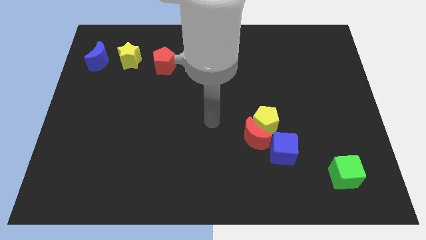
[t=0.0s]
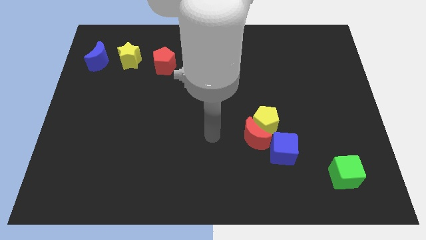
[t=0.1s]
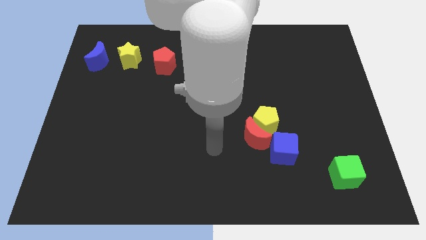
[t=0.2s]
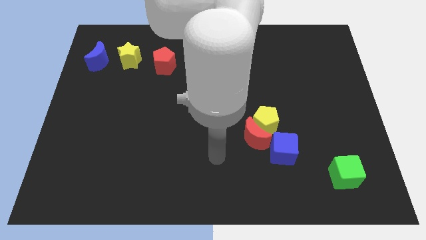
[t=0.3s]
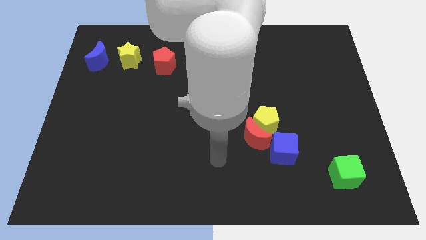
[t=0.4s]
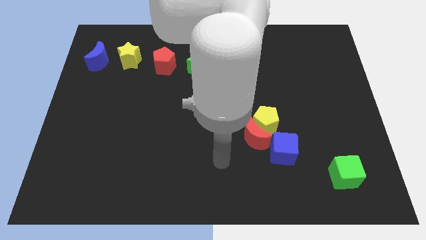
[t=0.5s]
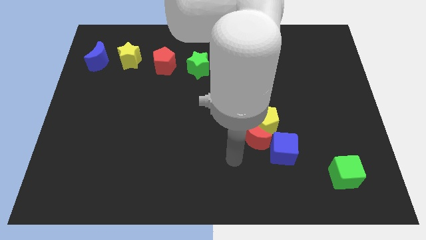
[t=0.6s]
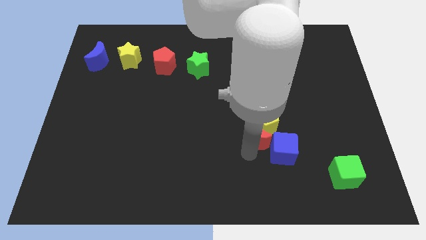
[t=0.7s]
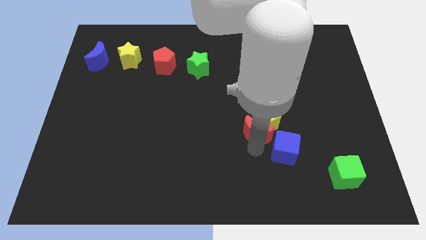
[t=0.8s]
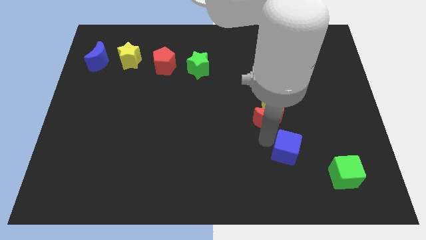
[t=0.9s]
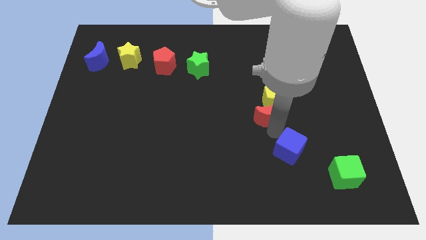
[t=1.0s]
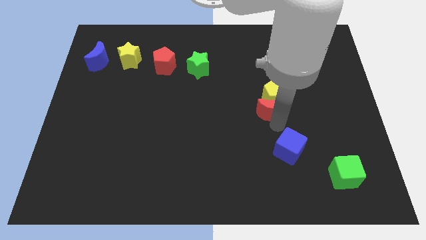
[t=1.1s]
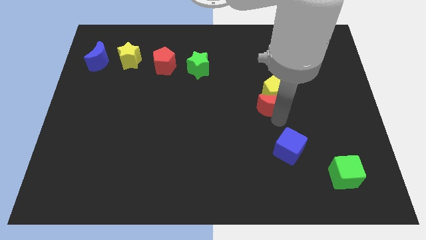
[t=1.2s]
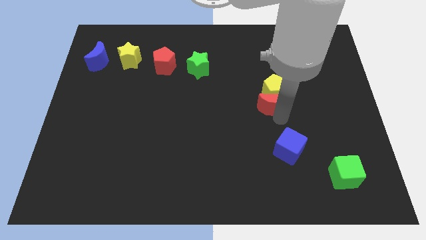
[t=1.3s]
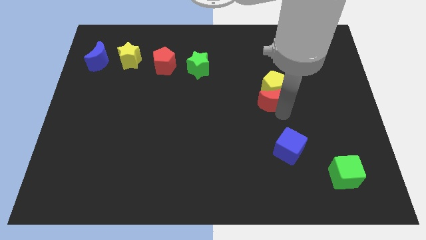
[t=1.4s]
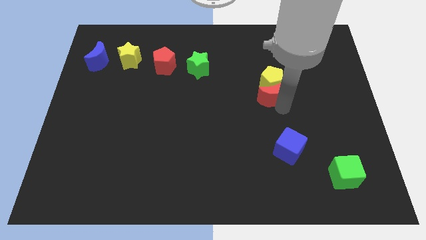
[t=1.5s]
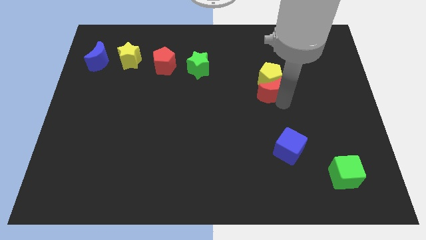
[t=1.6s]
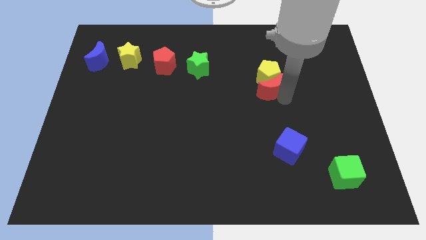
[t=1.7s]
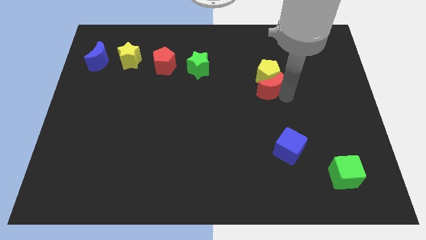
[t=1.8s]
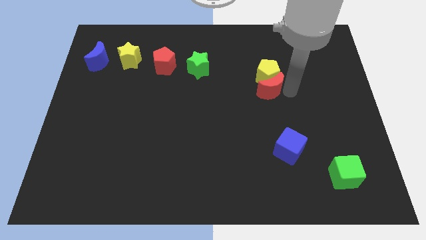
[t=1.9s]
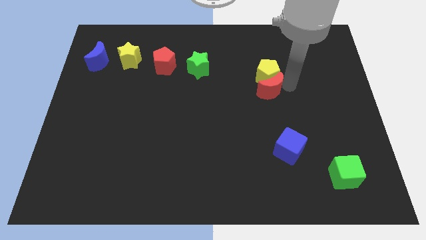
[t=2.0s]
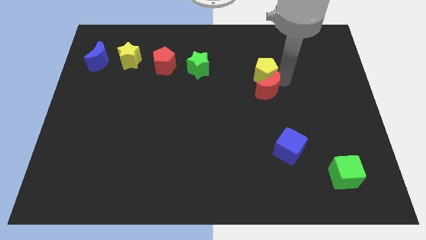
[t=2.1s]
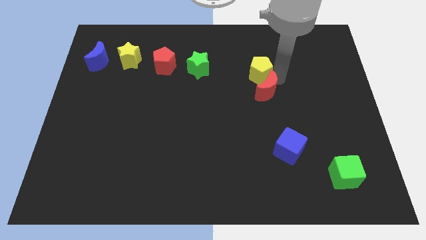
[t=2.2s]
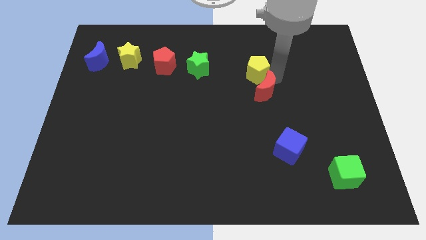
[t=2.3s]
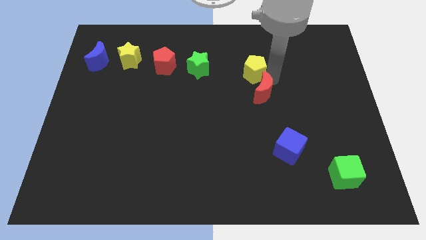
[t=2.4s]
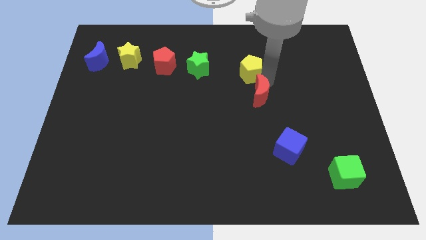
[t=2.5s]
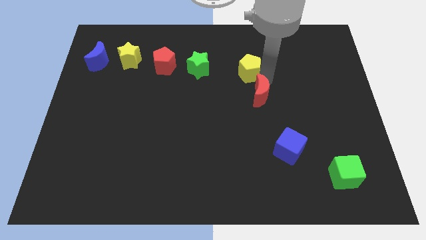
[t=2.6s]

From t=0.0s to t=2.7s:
separate red crescent and yellow pentagon from blue cube

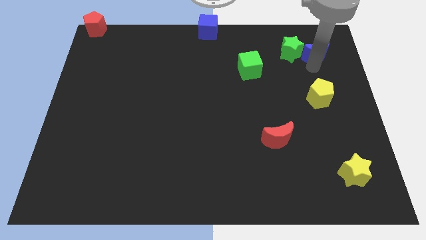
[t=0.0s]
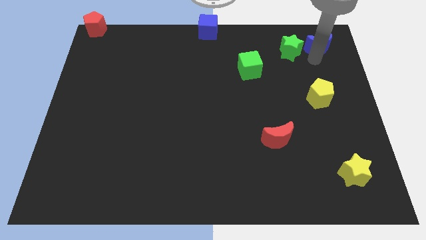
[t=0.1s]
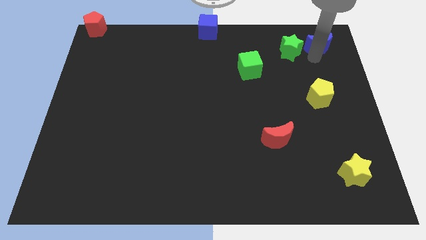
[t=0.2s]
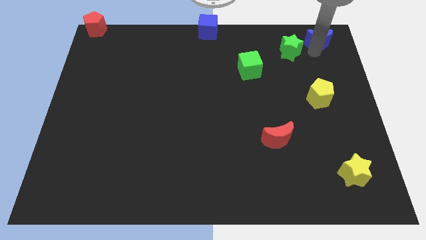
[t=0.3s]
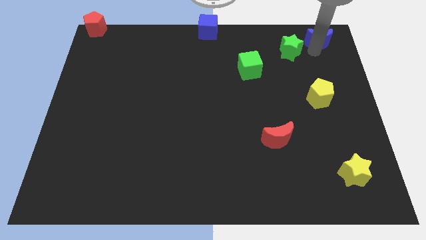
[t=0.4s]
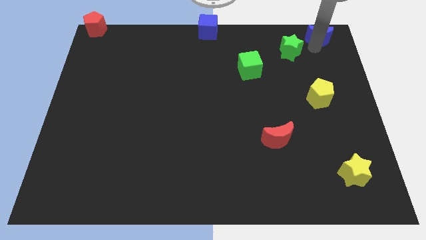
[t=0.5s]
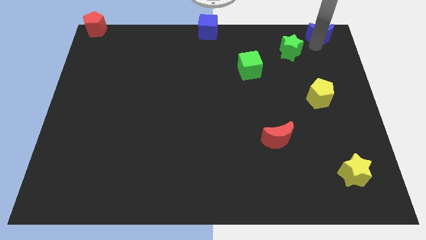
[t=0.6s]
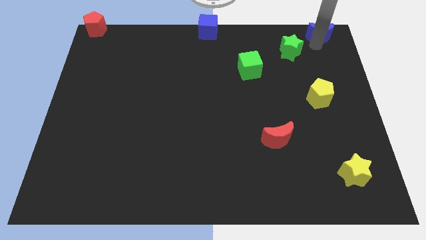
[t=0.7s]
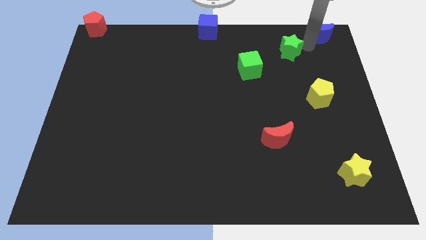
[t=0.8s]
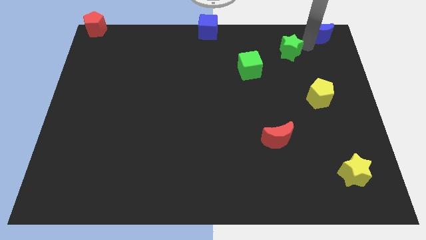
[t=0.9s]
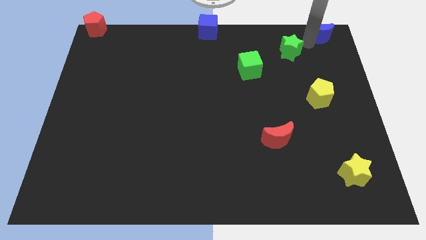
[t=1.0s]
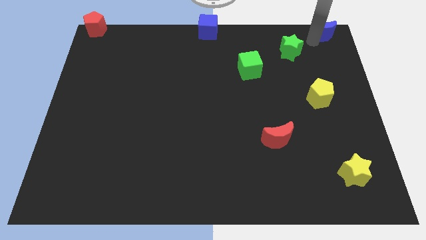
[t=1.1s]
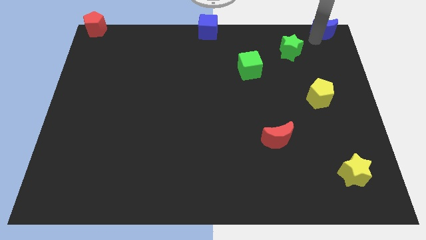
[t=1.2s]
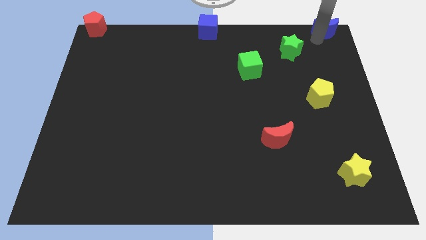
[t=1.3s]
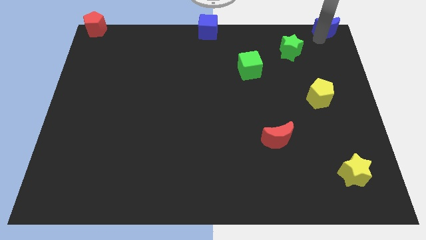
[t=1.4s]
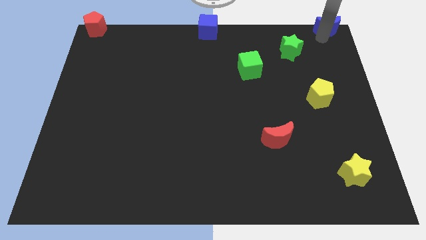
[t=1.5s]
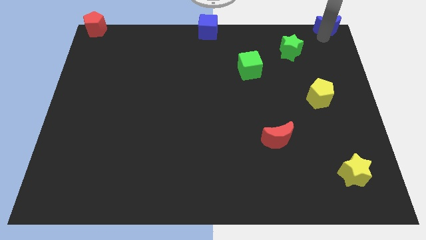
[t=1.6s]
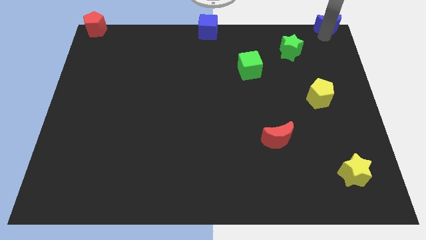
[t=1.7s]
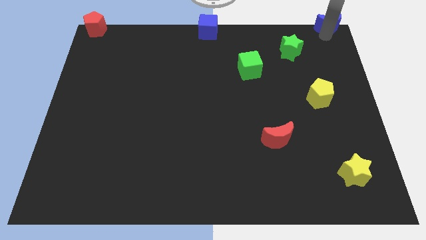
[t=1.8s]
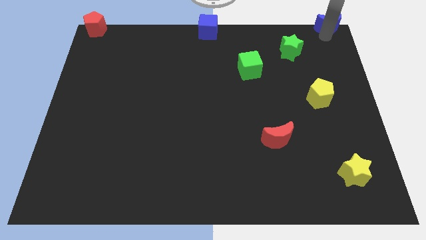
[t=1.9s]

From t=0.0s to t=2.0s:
push the blue crescent on the top right of the board

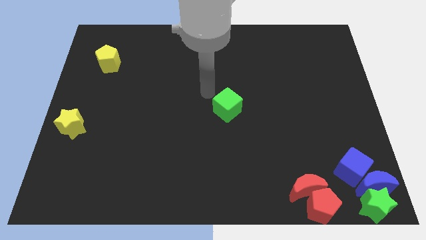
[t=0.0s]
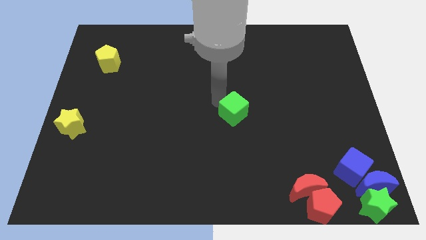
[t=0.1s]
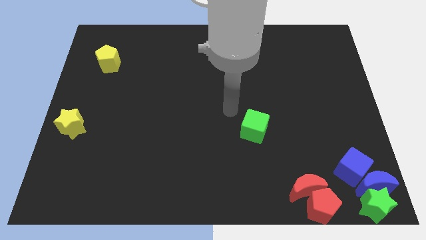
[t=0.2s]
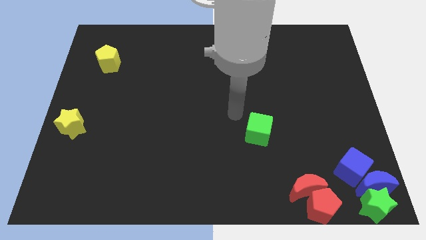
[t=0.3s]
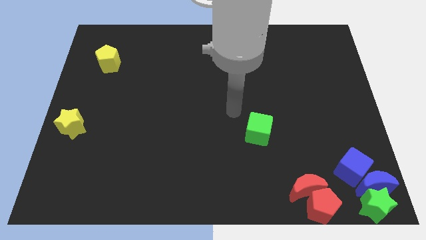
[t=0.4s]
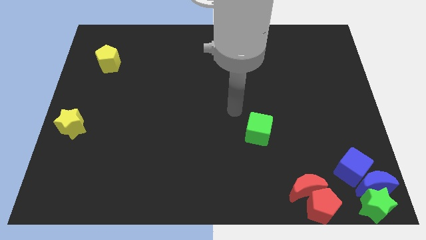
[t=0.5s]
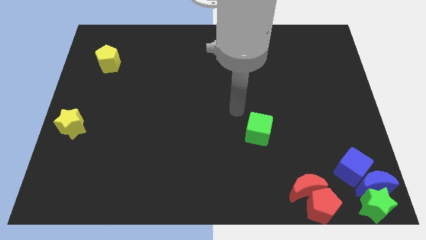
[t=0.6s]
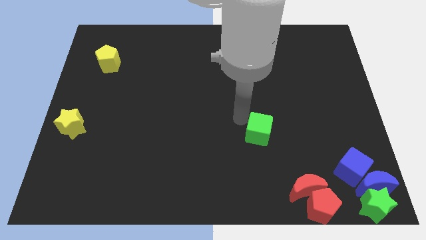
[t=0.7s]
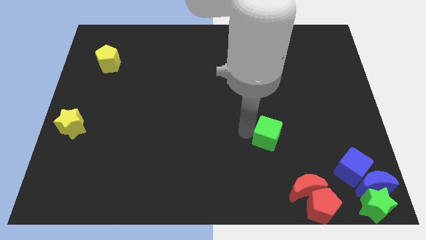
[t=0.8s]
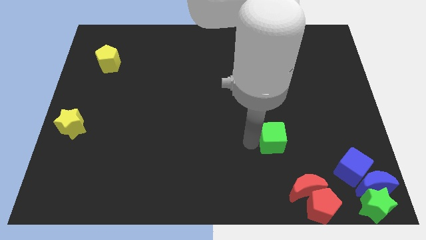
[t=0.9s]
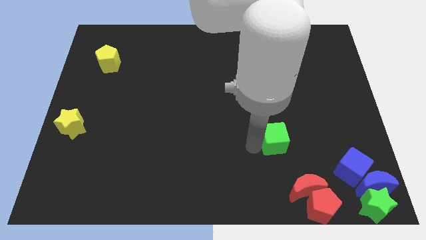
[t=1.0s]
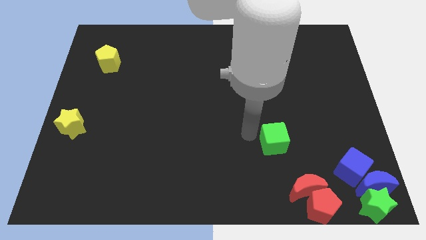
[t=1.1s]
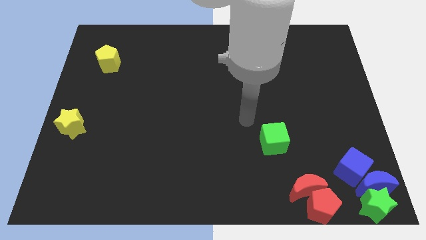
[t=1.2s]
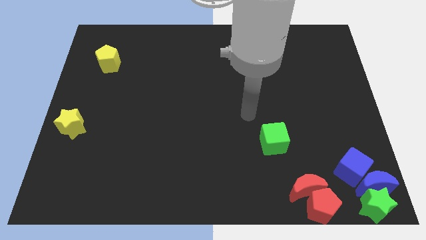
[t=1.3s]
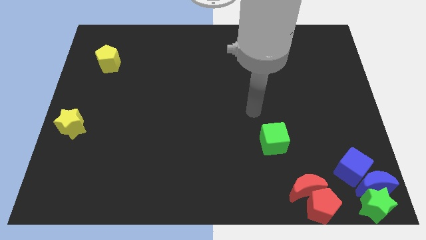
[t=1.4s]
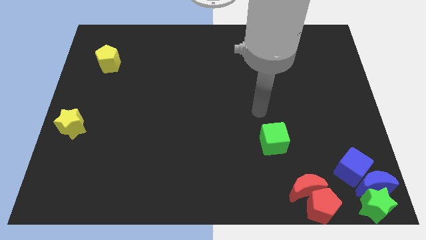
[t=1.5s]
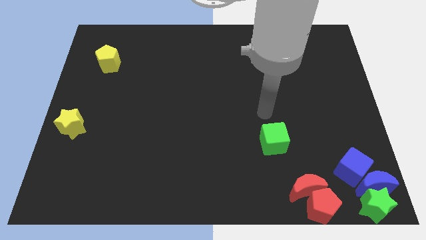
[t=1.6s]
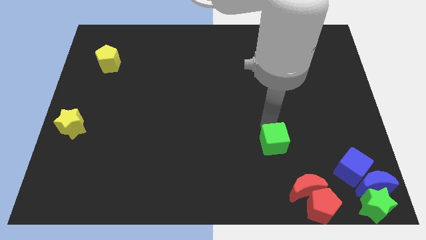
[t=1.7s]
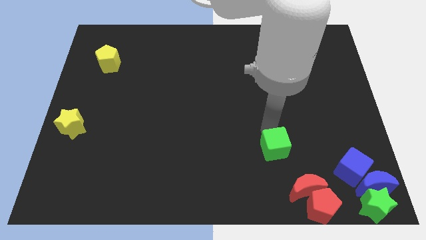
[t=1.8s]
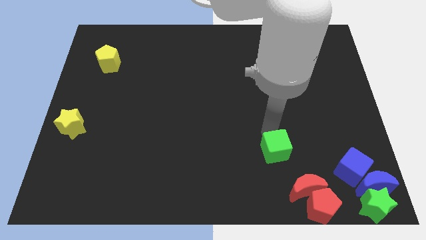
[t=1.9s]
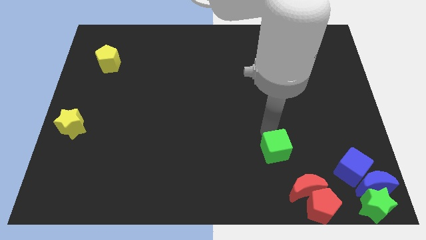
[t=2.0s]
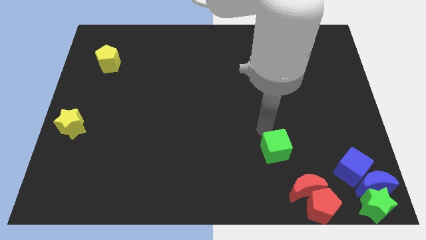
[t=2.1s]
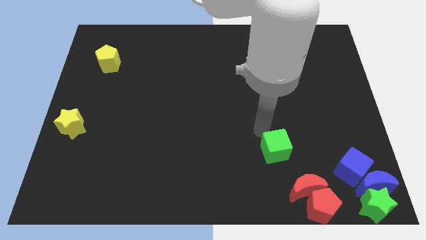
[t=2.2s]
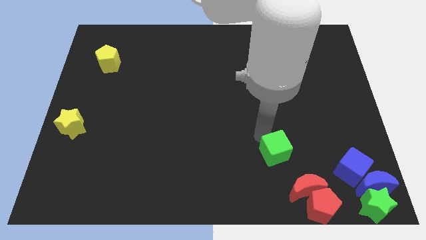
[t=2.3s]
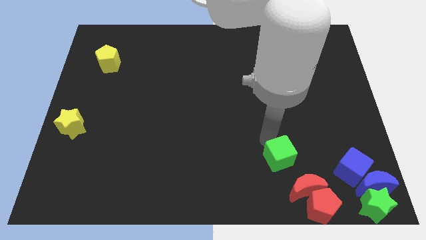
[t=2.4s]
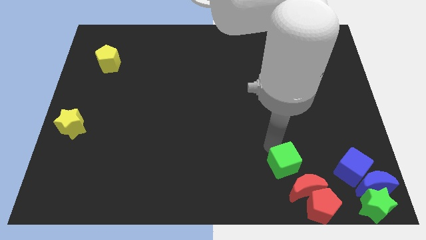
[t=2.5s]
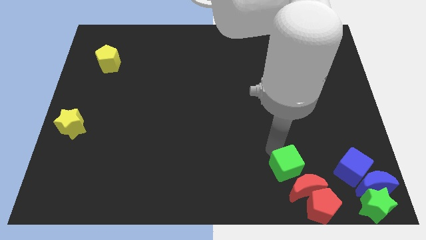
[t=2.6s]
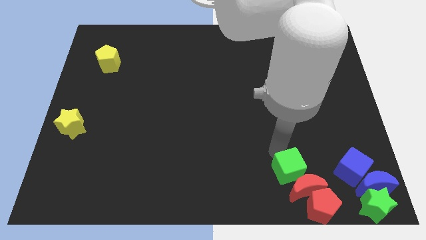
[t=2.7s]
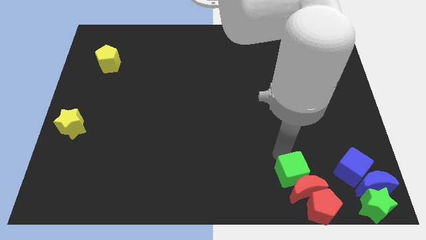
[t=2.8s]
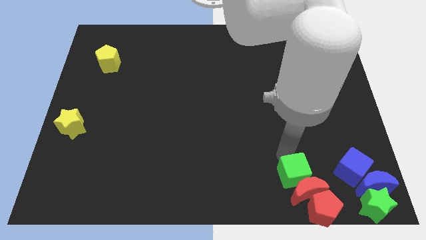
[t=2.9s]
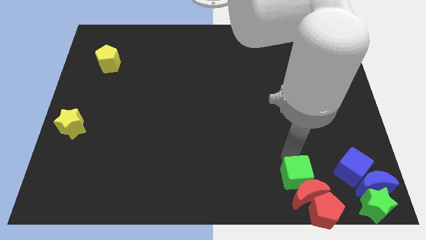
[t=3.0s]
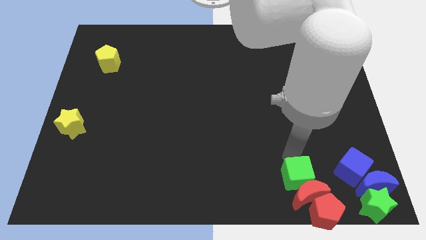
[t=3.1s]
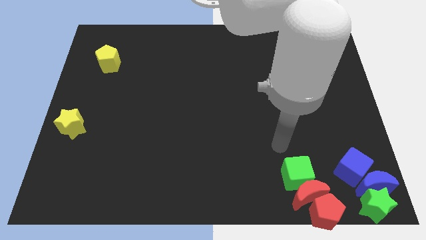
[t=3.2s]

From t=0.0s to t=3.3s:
move the green cube above the red moon

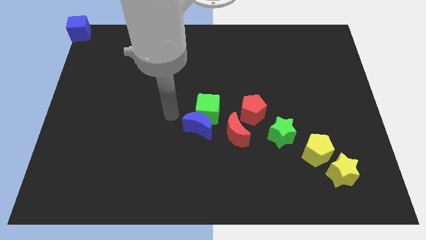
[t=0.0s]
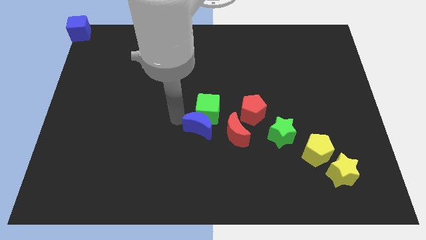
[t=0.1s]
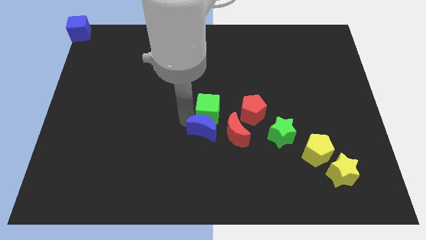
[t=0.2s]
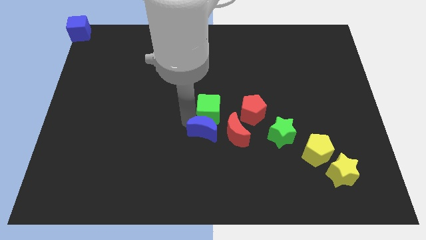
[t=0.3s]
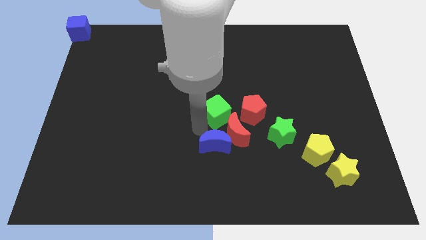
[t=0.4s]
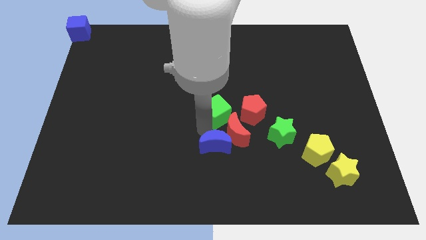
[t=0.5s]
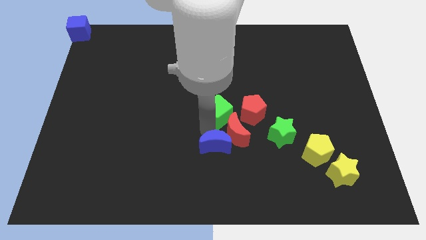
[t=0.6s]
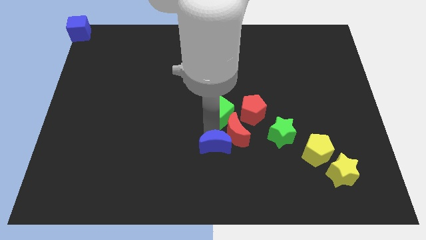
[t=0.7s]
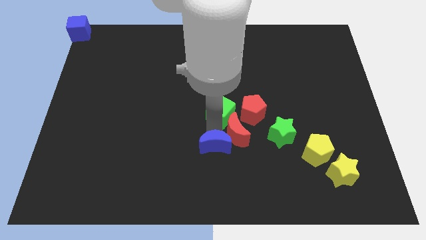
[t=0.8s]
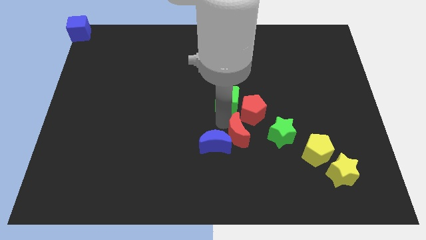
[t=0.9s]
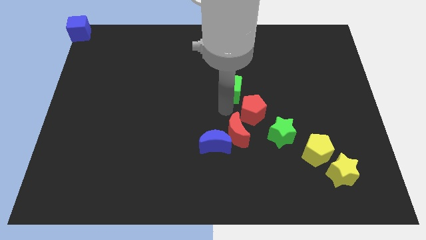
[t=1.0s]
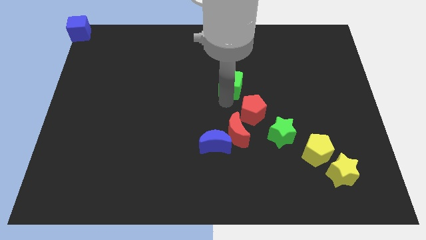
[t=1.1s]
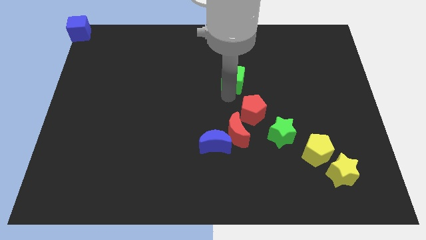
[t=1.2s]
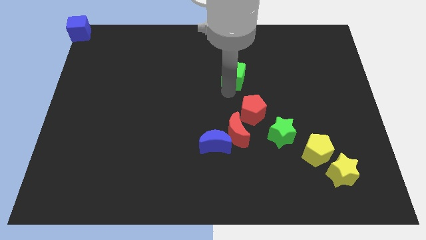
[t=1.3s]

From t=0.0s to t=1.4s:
separate the green cube from the blue moon
